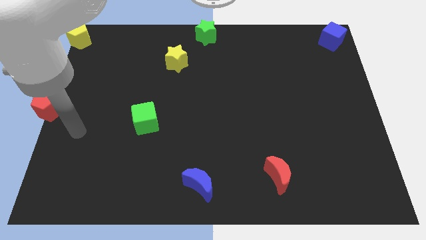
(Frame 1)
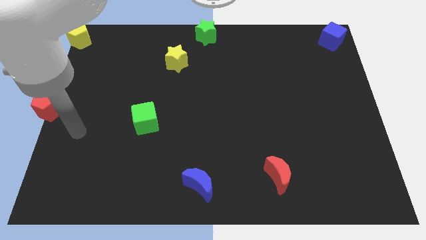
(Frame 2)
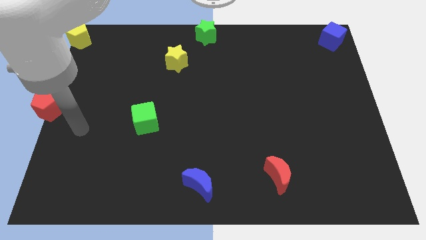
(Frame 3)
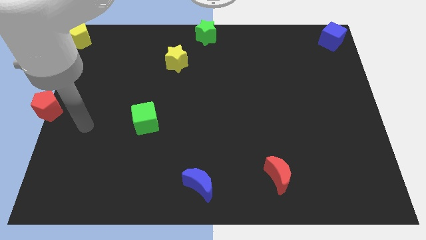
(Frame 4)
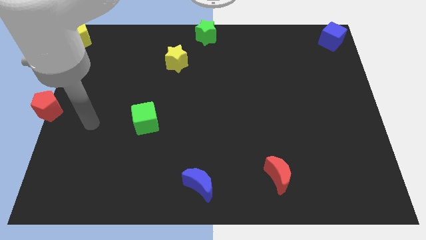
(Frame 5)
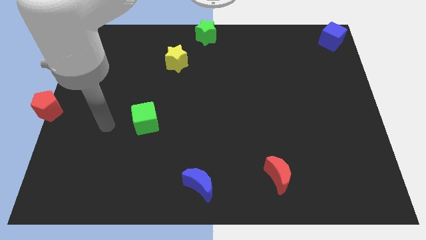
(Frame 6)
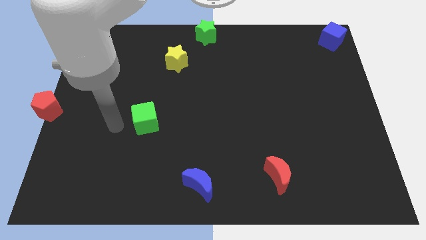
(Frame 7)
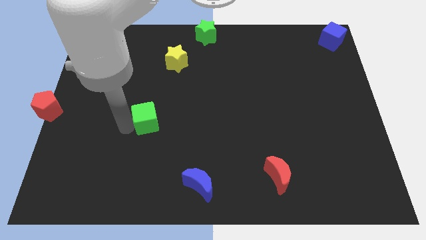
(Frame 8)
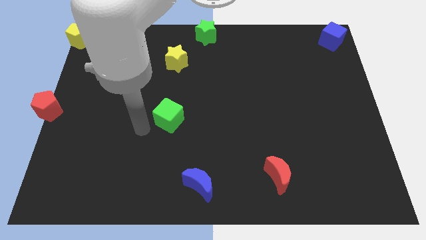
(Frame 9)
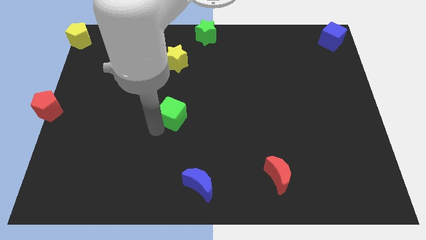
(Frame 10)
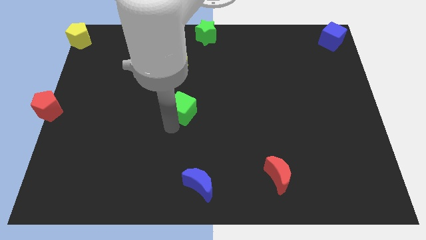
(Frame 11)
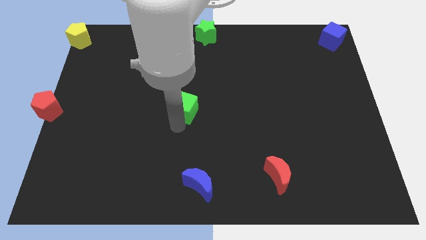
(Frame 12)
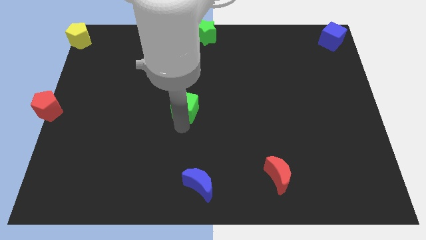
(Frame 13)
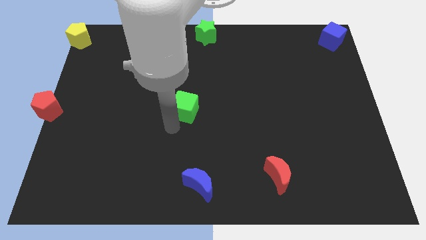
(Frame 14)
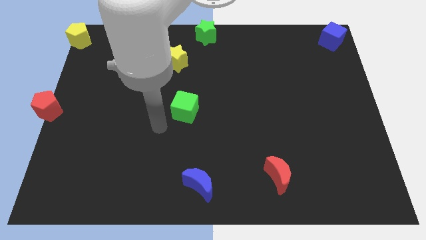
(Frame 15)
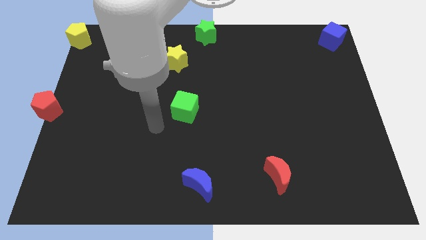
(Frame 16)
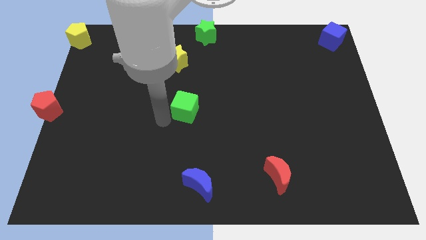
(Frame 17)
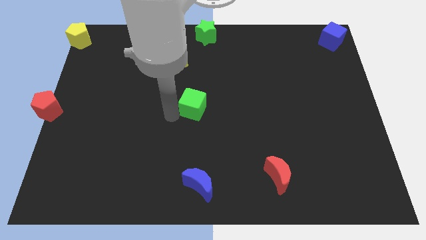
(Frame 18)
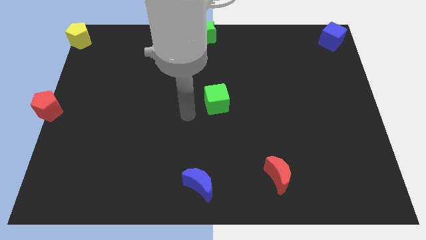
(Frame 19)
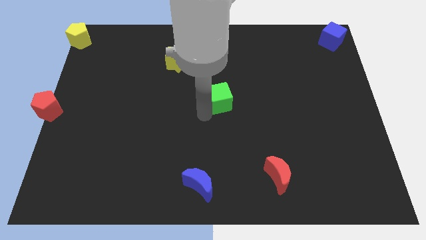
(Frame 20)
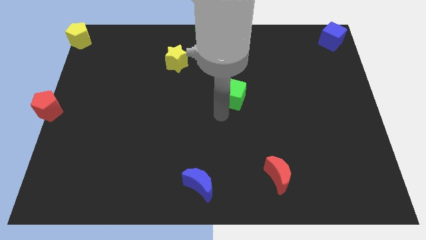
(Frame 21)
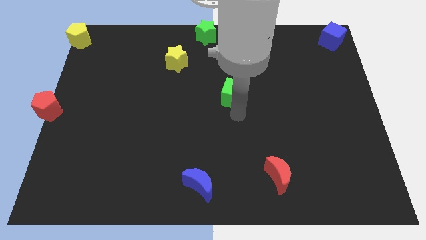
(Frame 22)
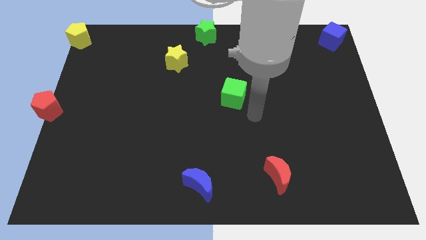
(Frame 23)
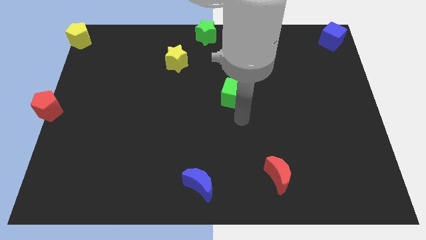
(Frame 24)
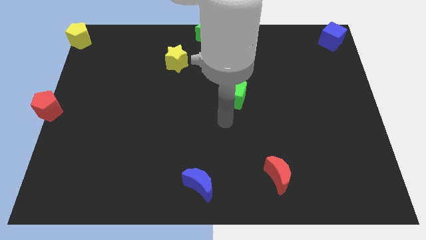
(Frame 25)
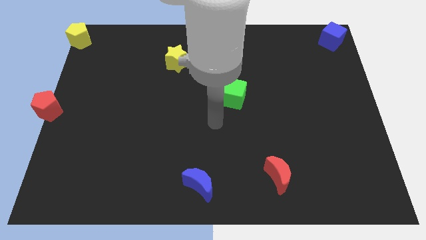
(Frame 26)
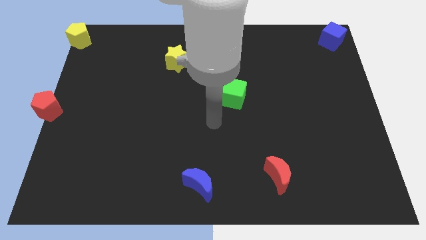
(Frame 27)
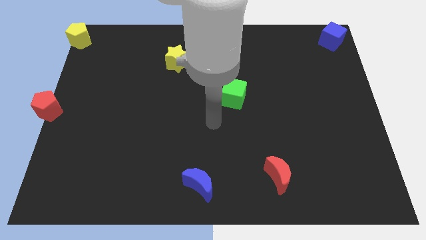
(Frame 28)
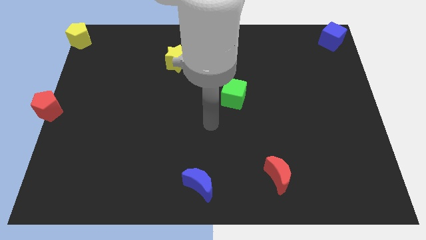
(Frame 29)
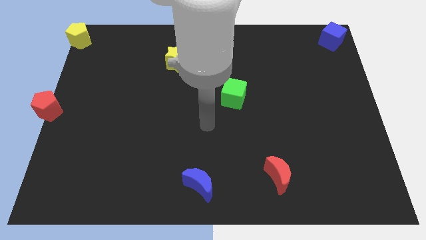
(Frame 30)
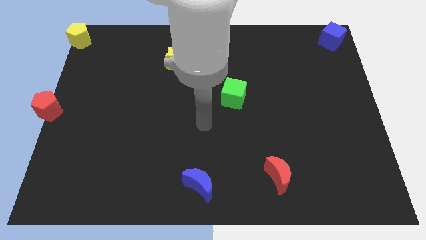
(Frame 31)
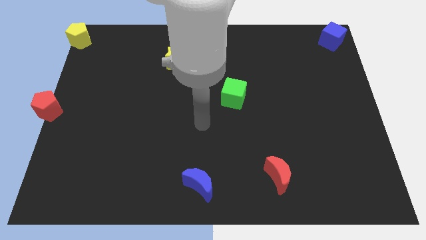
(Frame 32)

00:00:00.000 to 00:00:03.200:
move the green cube parallel to red pentagon

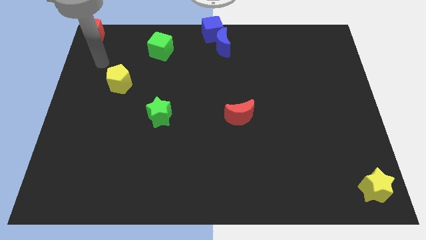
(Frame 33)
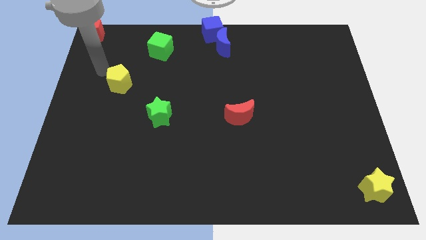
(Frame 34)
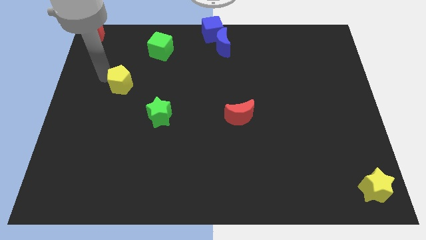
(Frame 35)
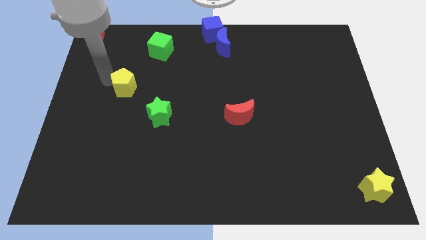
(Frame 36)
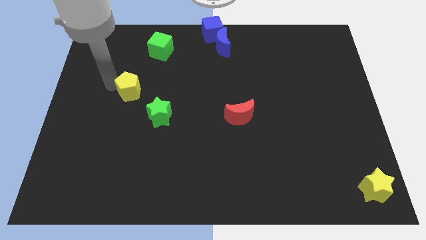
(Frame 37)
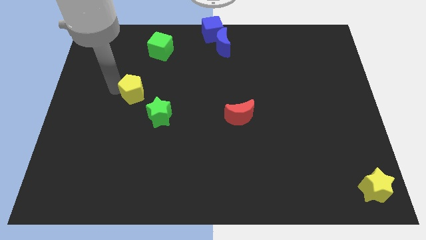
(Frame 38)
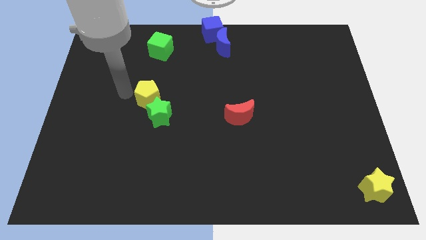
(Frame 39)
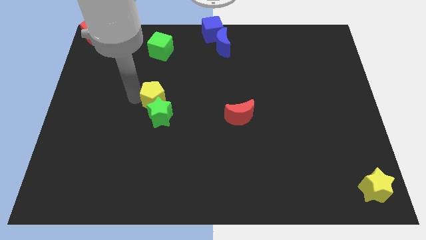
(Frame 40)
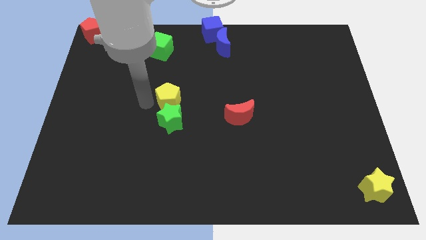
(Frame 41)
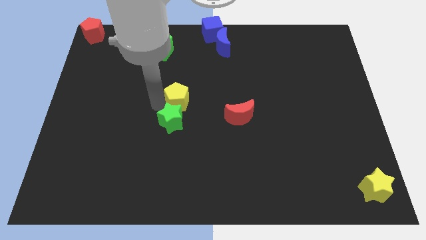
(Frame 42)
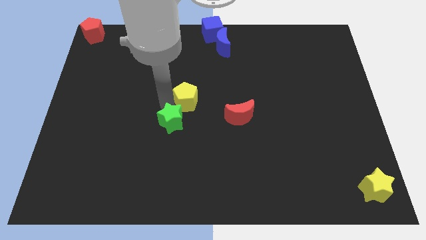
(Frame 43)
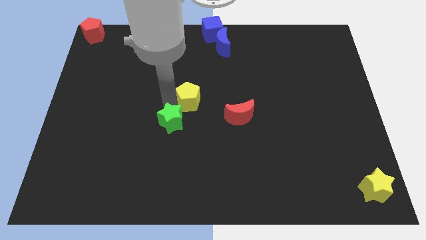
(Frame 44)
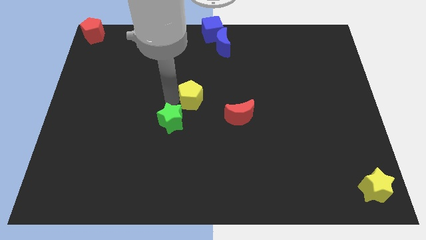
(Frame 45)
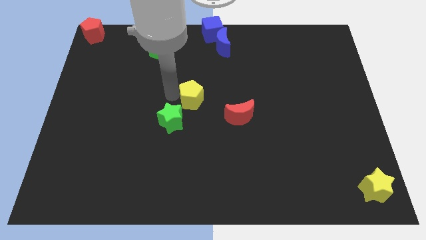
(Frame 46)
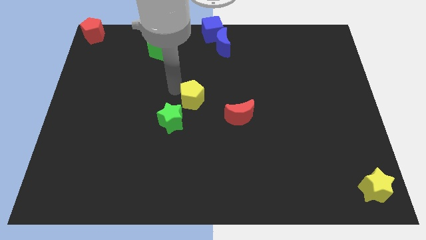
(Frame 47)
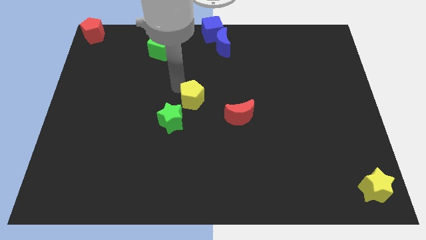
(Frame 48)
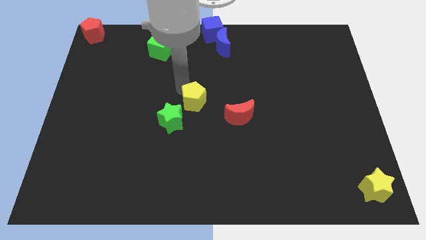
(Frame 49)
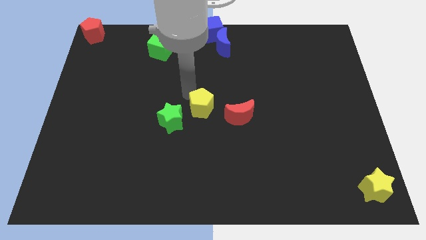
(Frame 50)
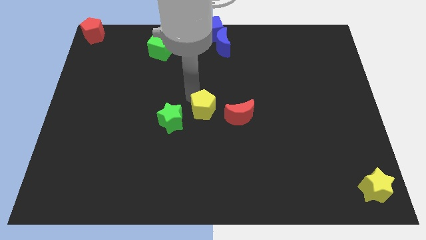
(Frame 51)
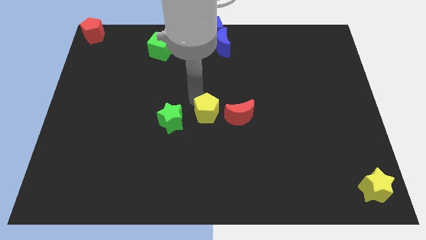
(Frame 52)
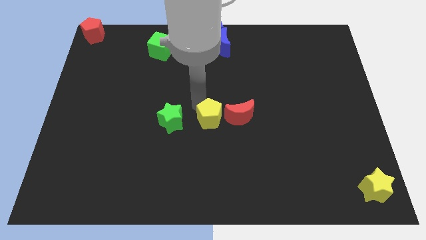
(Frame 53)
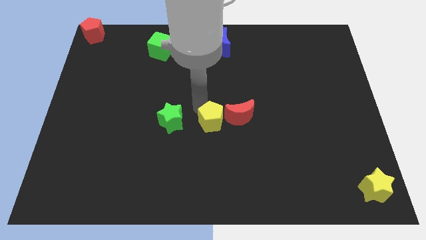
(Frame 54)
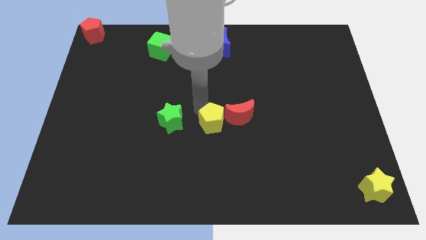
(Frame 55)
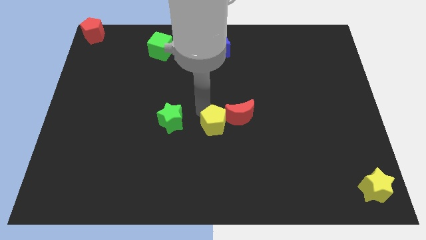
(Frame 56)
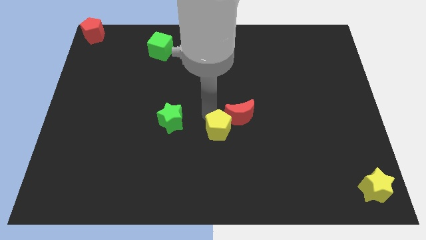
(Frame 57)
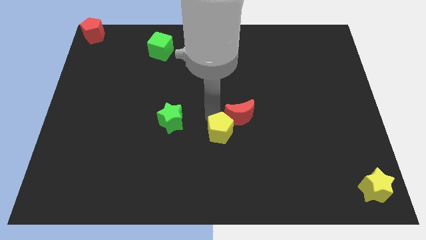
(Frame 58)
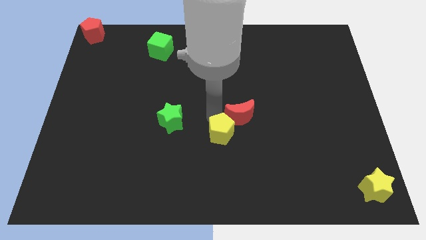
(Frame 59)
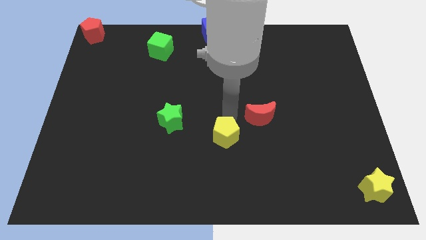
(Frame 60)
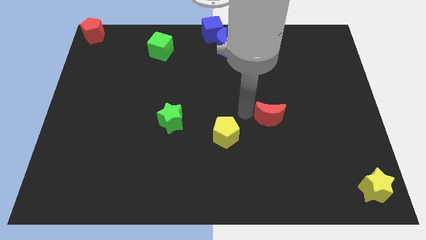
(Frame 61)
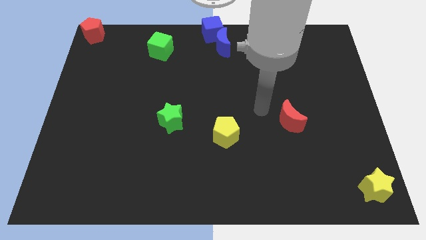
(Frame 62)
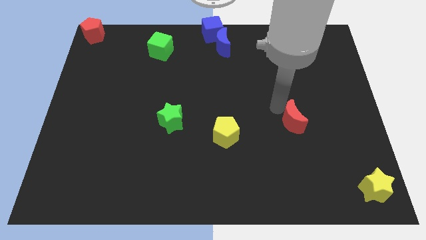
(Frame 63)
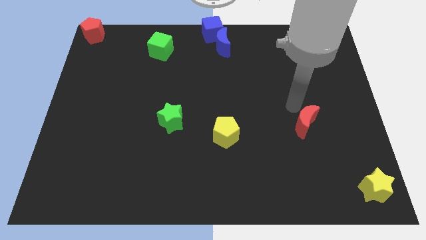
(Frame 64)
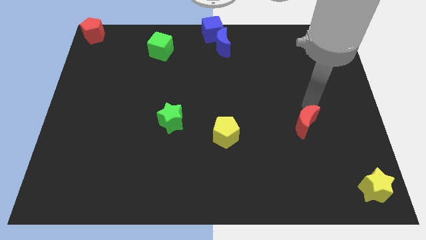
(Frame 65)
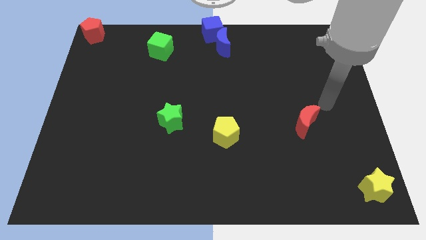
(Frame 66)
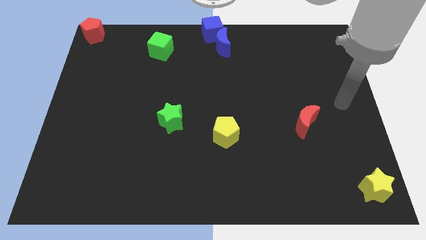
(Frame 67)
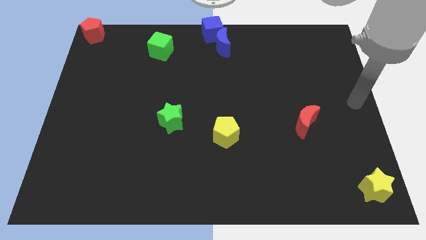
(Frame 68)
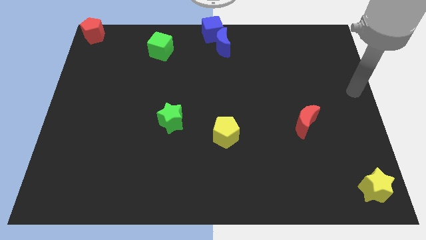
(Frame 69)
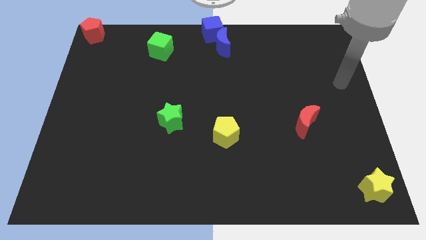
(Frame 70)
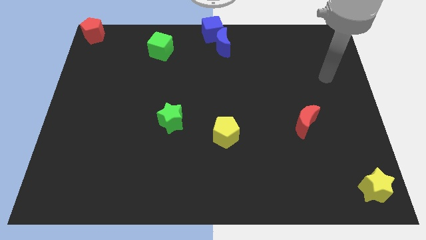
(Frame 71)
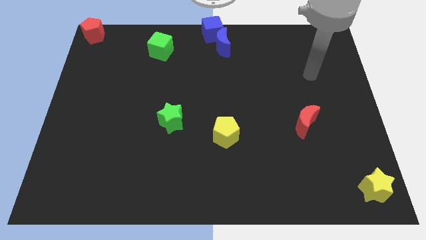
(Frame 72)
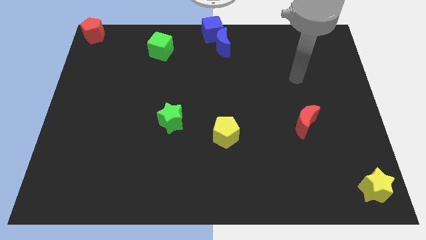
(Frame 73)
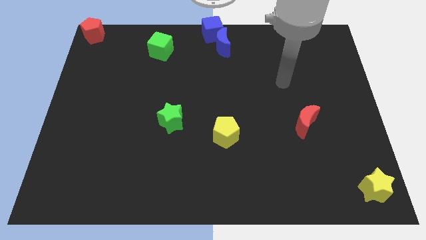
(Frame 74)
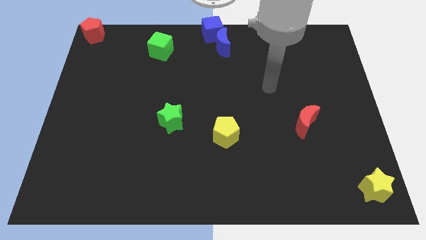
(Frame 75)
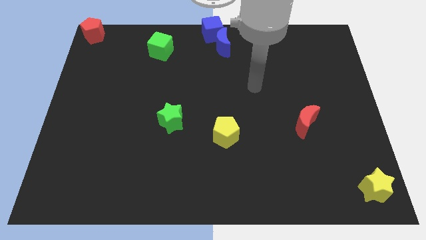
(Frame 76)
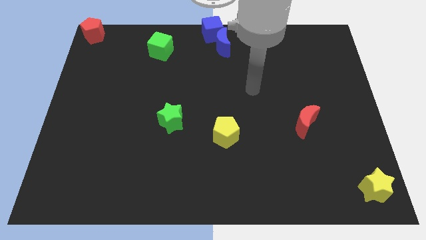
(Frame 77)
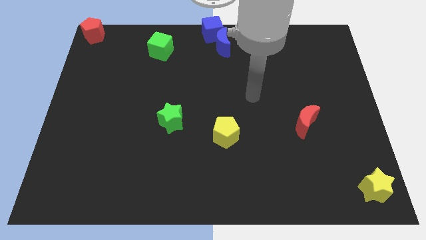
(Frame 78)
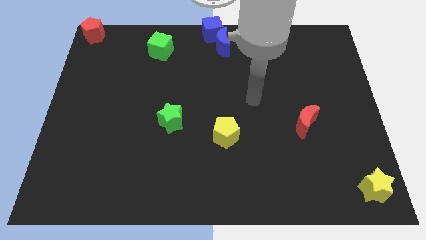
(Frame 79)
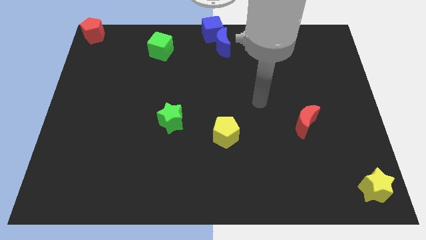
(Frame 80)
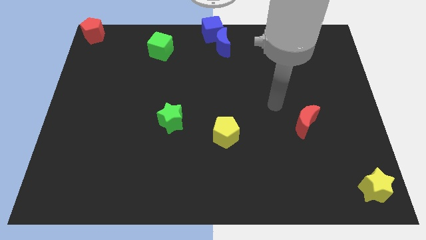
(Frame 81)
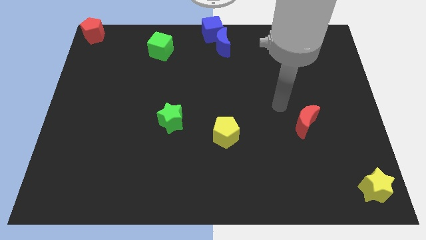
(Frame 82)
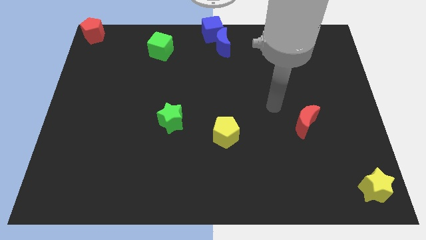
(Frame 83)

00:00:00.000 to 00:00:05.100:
place the yellow pentagon in between green star and red moon

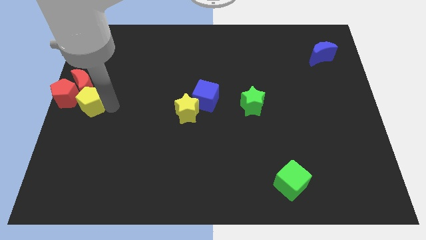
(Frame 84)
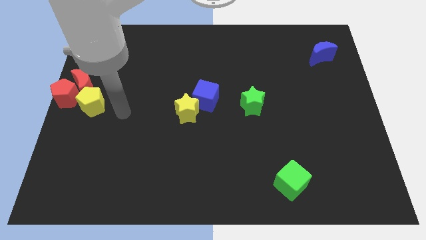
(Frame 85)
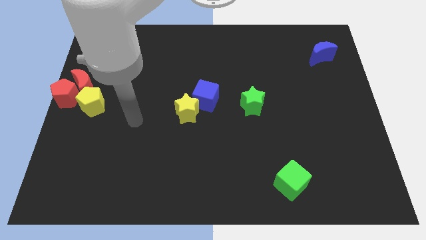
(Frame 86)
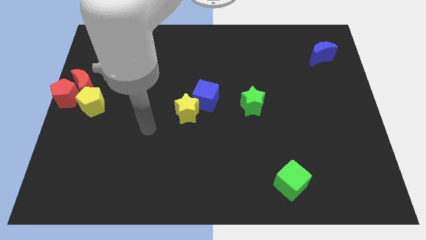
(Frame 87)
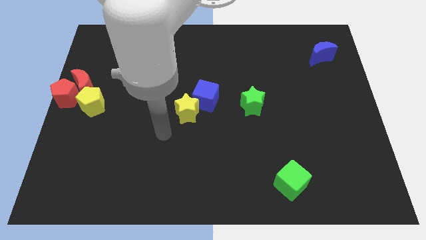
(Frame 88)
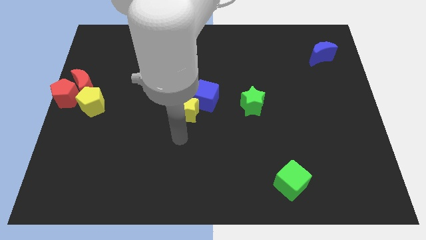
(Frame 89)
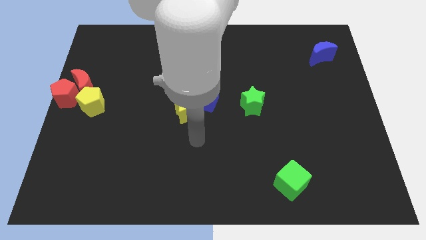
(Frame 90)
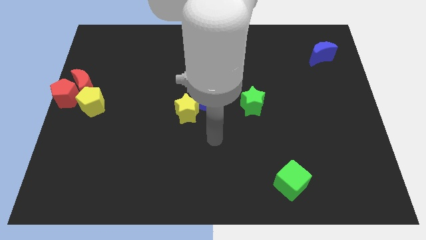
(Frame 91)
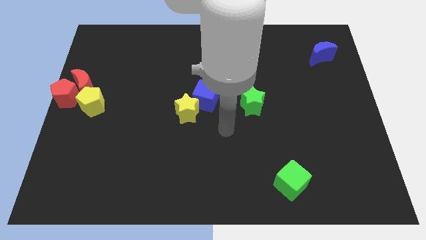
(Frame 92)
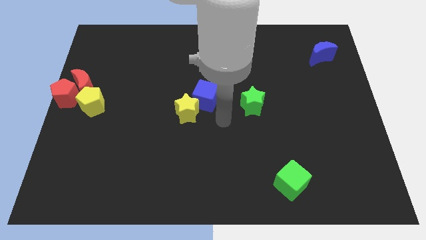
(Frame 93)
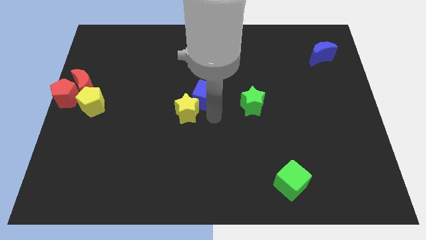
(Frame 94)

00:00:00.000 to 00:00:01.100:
move your arm towards the yellow star
